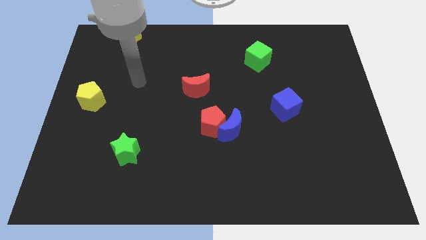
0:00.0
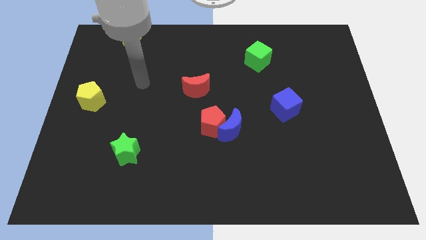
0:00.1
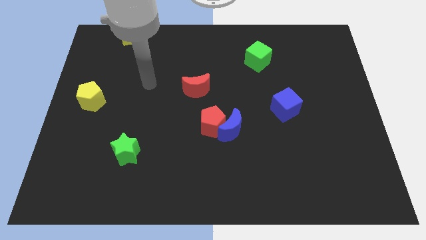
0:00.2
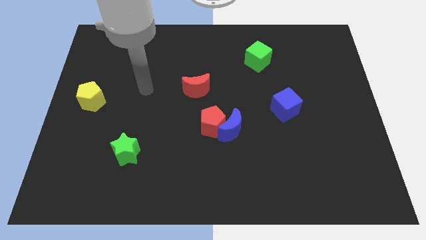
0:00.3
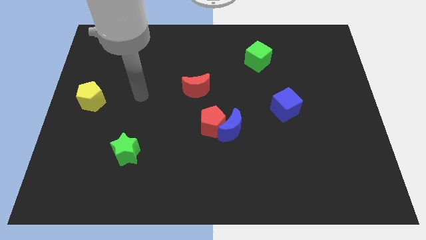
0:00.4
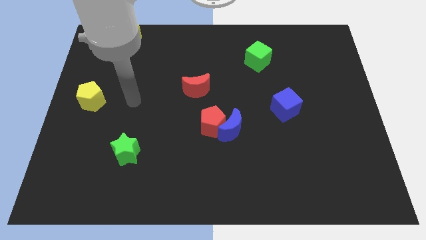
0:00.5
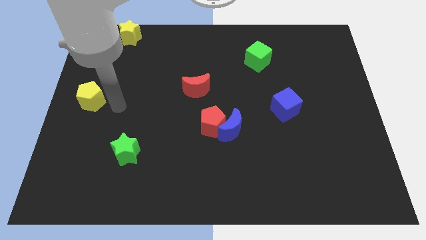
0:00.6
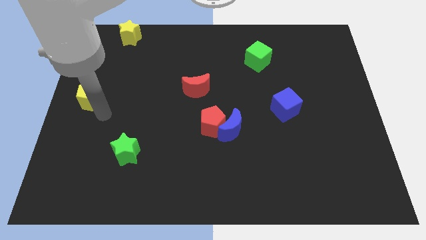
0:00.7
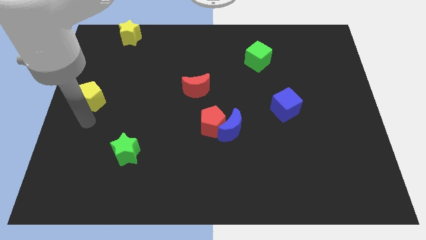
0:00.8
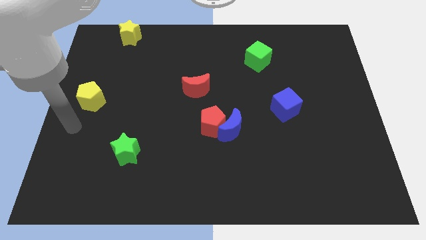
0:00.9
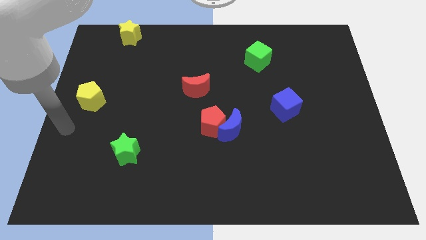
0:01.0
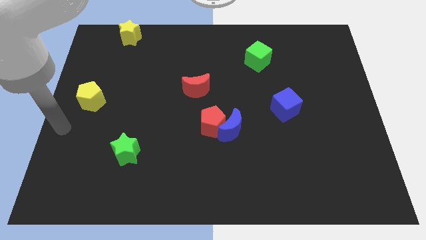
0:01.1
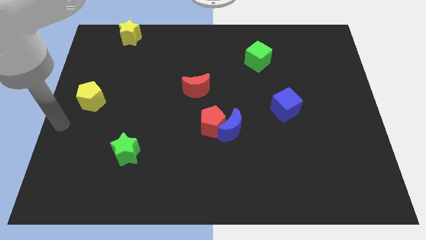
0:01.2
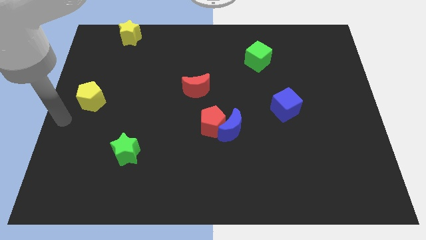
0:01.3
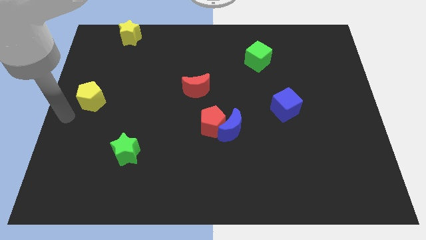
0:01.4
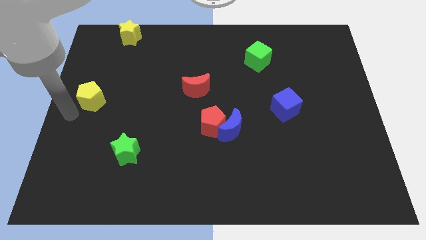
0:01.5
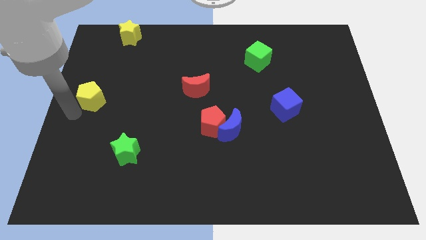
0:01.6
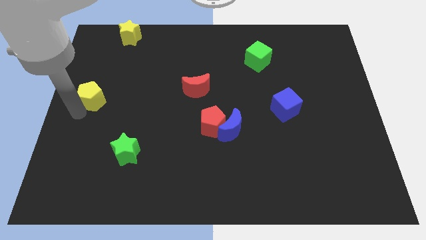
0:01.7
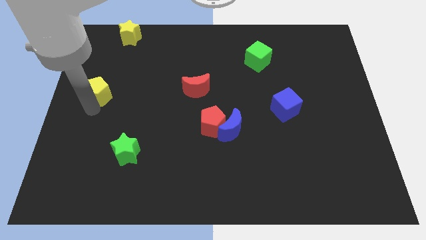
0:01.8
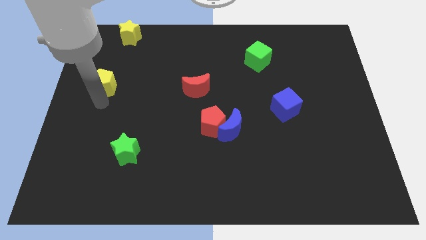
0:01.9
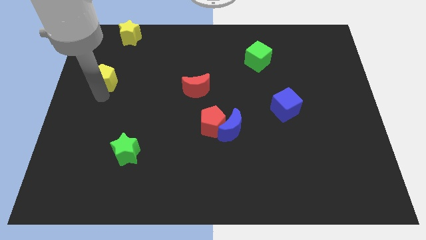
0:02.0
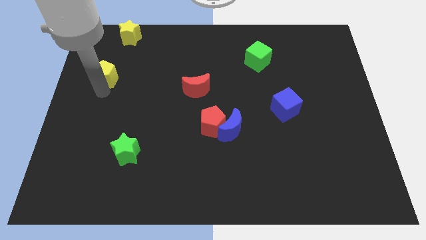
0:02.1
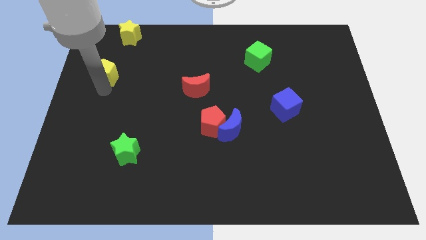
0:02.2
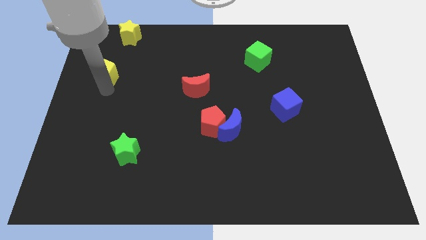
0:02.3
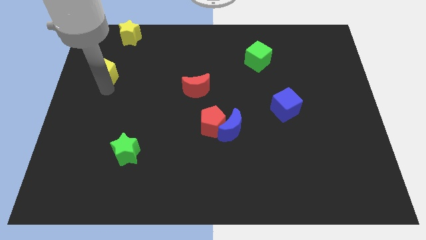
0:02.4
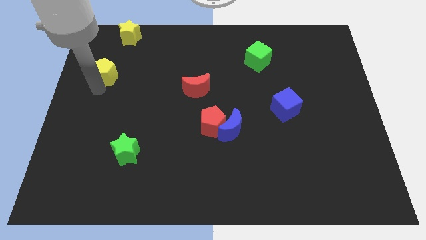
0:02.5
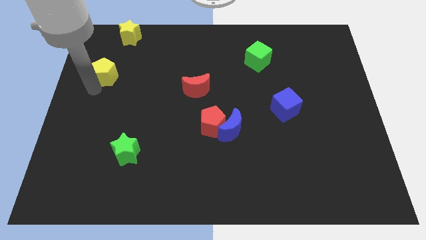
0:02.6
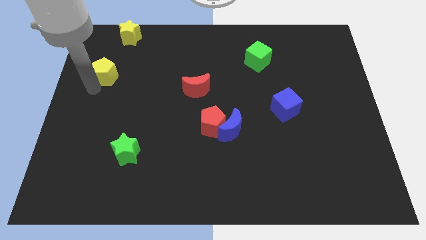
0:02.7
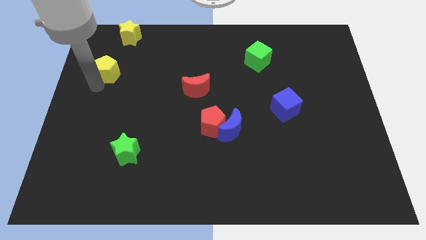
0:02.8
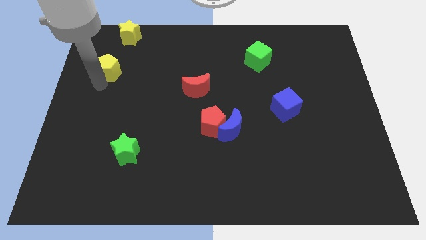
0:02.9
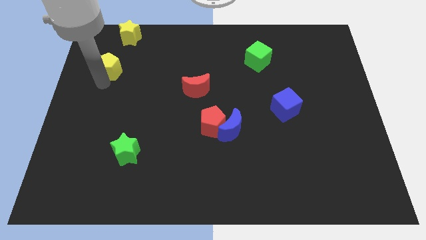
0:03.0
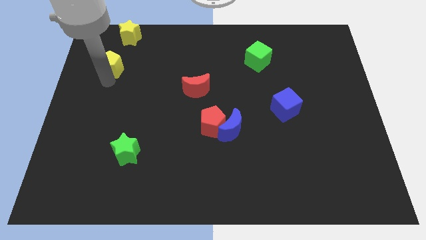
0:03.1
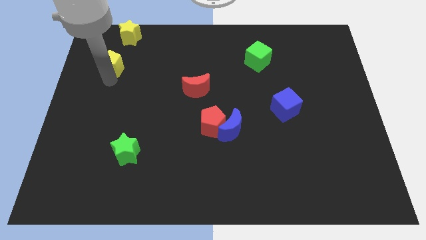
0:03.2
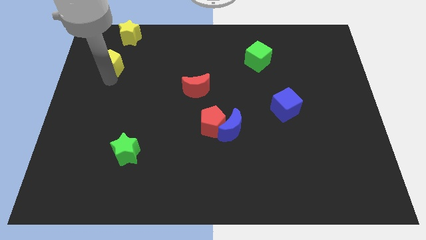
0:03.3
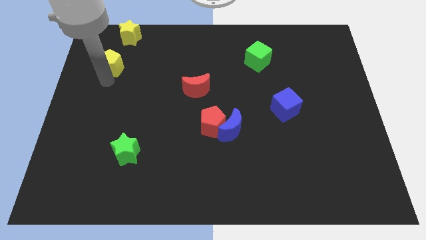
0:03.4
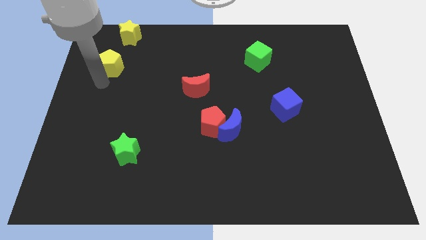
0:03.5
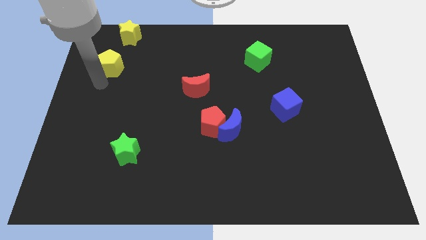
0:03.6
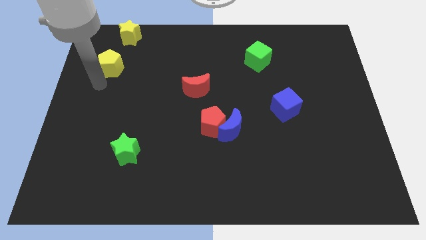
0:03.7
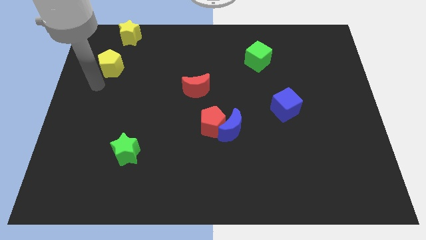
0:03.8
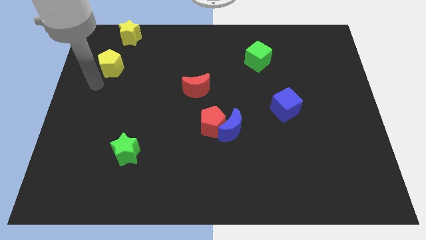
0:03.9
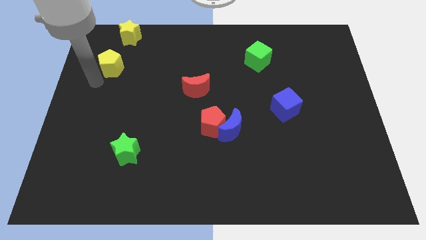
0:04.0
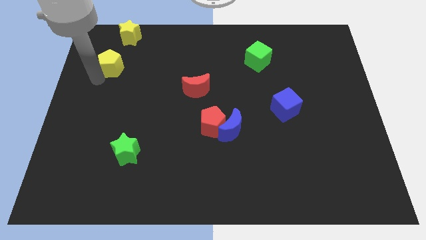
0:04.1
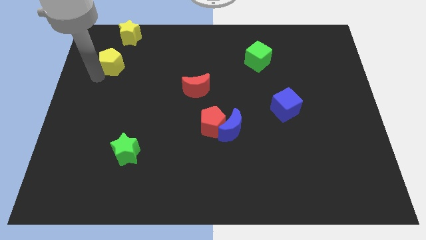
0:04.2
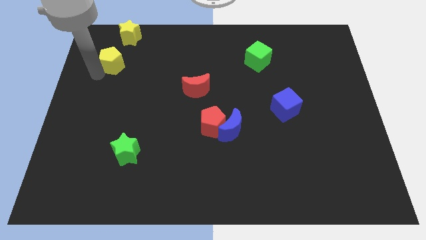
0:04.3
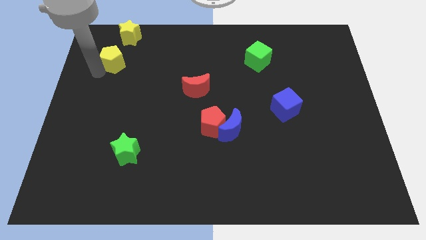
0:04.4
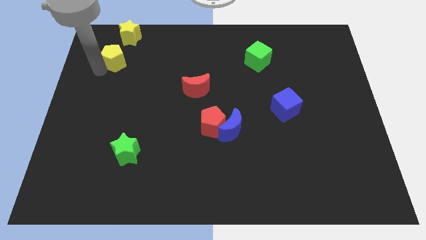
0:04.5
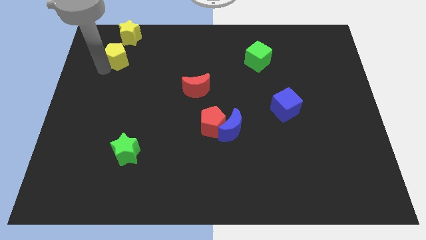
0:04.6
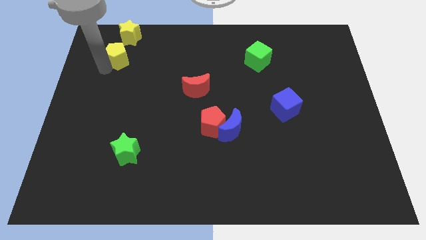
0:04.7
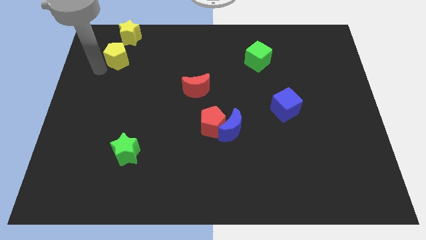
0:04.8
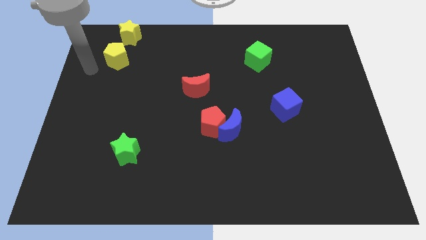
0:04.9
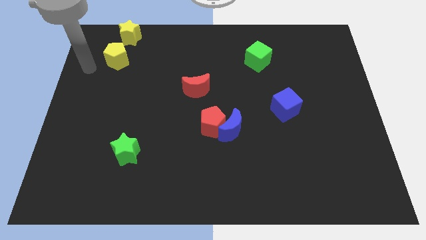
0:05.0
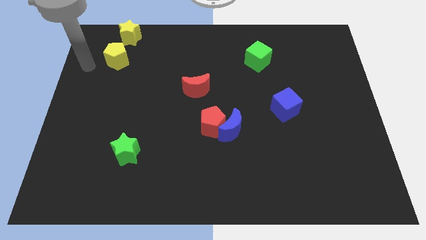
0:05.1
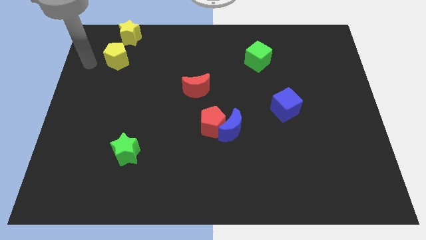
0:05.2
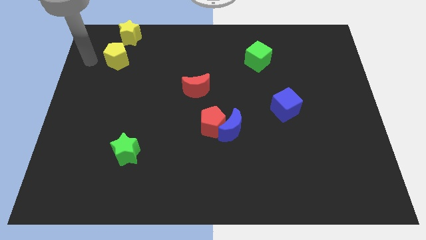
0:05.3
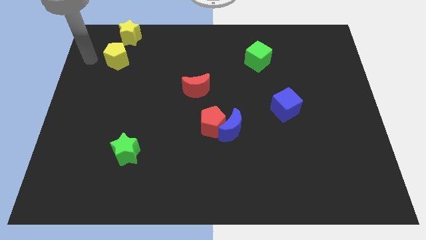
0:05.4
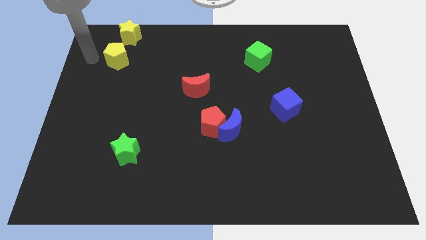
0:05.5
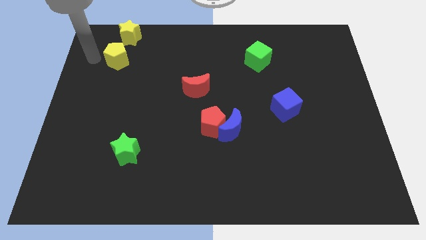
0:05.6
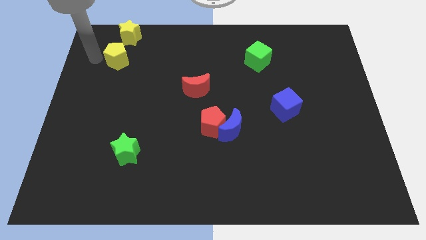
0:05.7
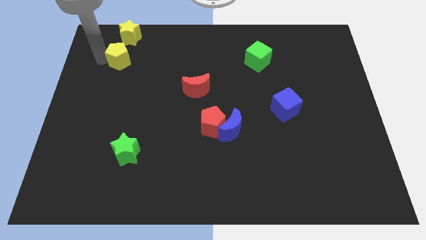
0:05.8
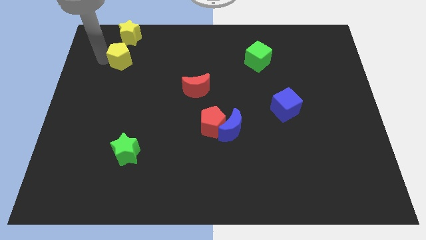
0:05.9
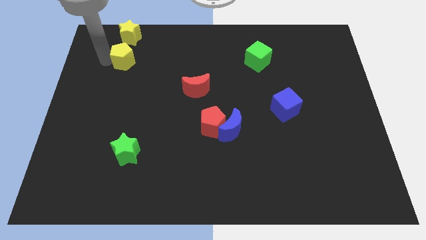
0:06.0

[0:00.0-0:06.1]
push yellow pentagon towards yellow star

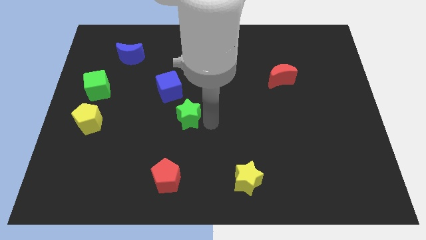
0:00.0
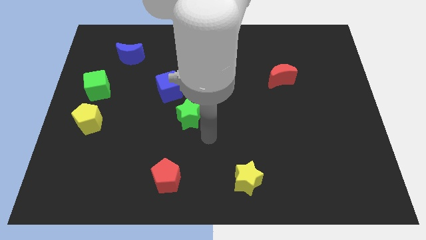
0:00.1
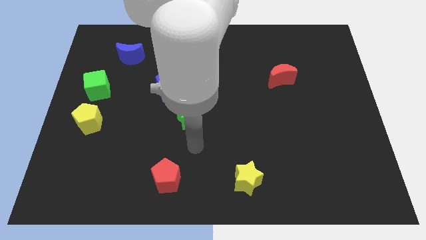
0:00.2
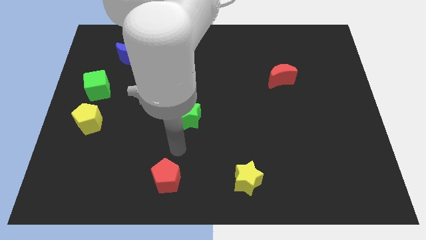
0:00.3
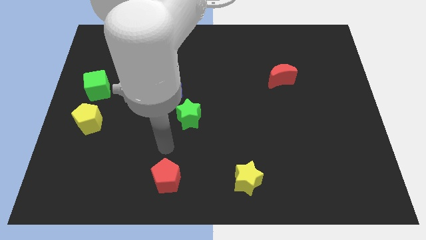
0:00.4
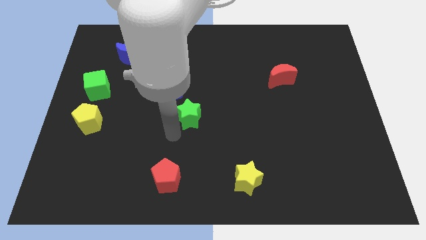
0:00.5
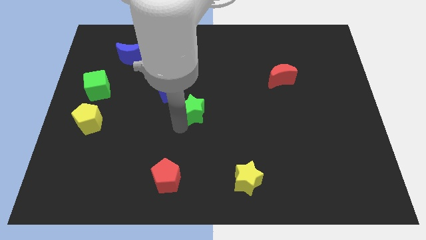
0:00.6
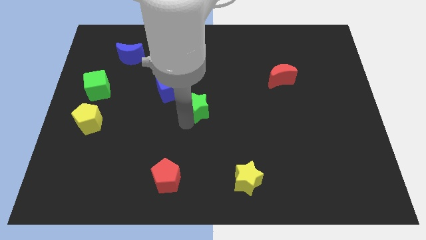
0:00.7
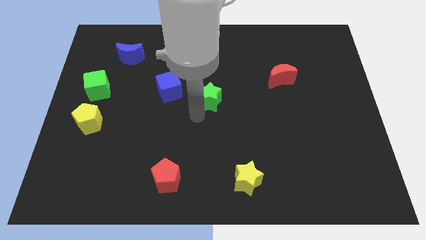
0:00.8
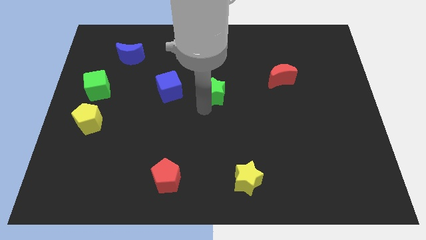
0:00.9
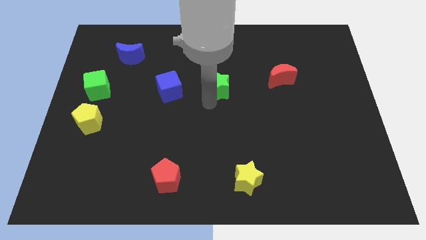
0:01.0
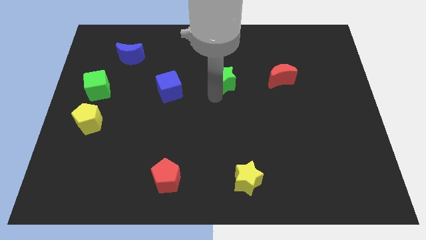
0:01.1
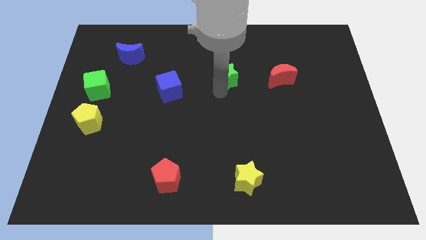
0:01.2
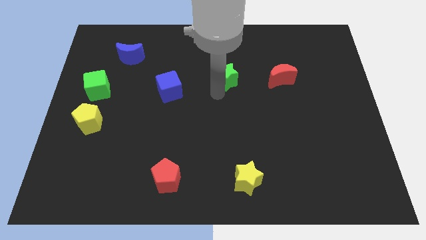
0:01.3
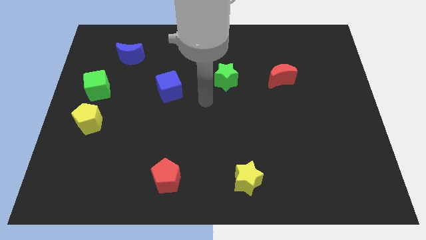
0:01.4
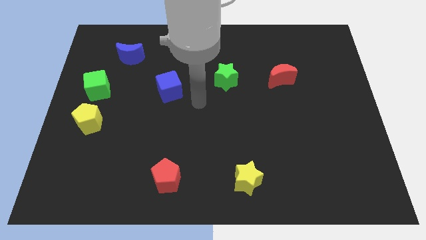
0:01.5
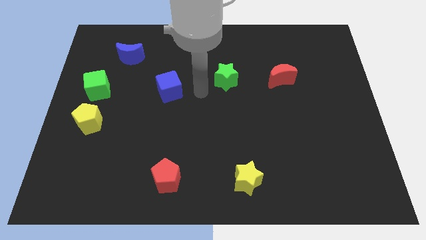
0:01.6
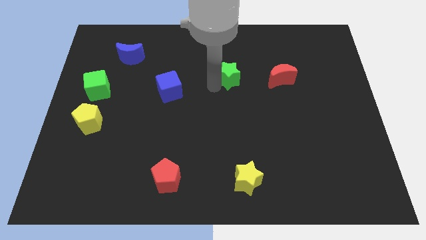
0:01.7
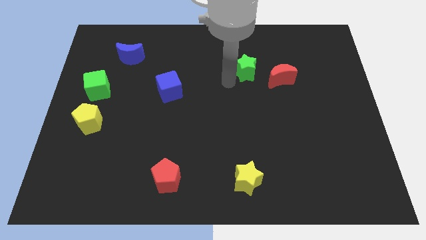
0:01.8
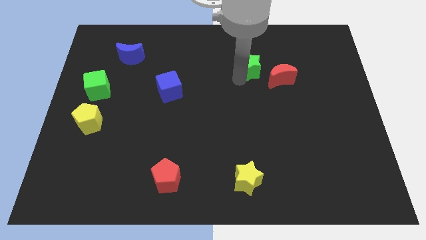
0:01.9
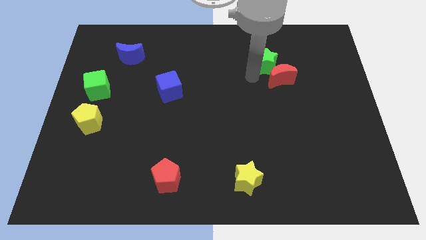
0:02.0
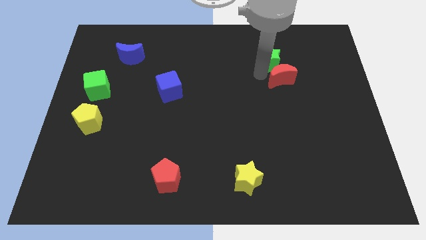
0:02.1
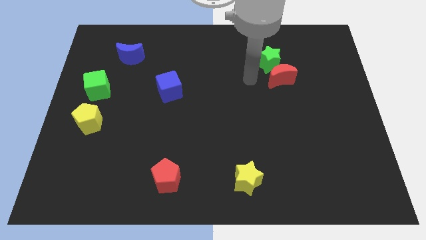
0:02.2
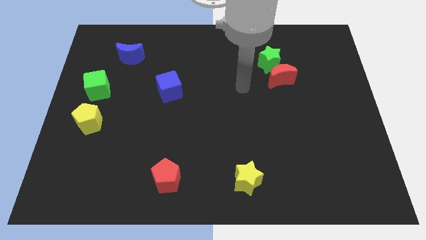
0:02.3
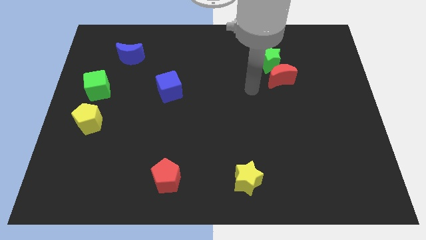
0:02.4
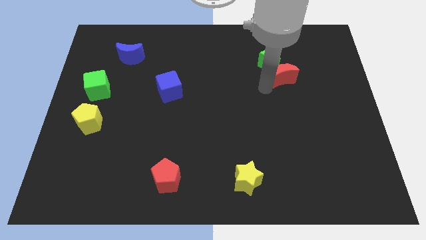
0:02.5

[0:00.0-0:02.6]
place the green star above the red crescent
